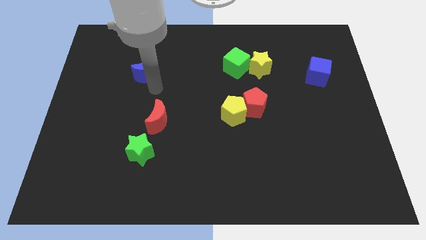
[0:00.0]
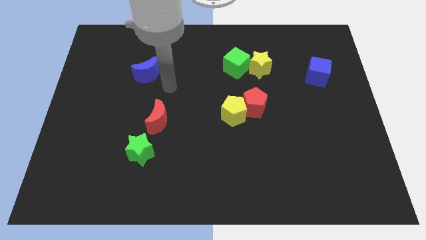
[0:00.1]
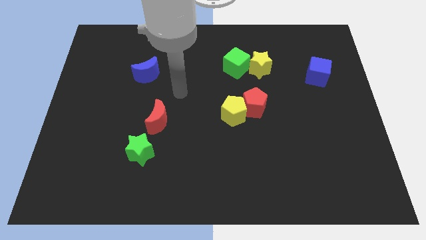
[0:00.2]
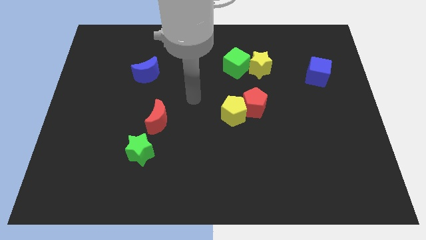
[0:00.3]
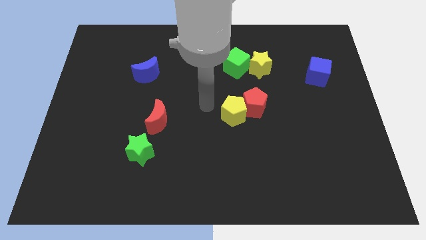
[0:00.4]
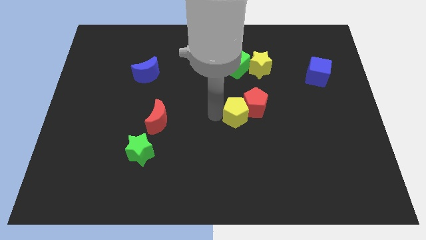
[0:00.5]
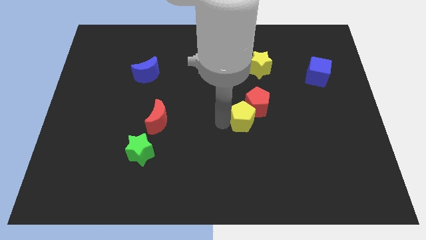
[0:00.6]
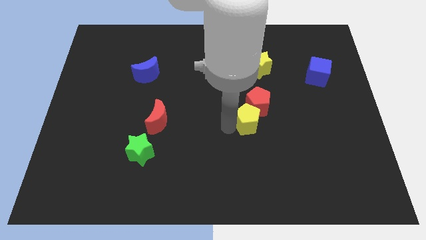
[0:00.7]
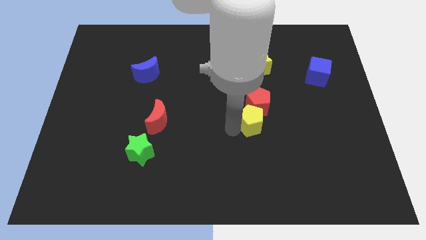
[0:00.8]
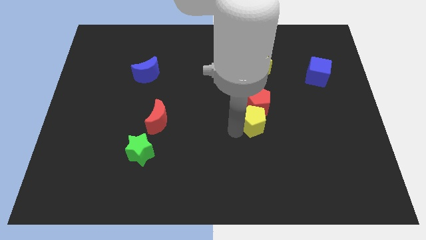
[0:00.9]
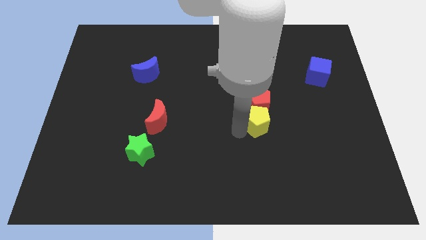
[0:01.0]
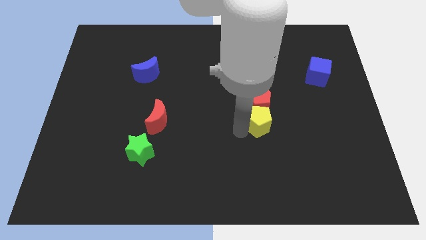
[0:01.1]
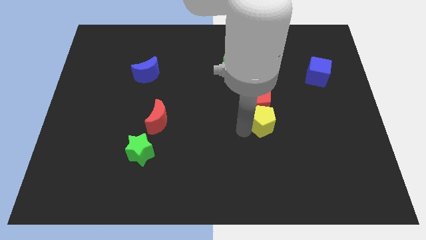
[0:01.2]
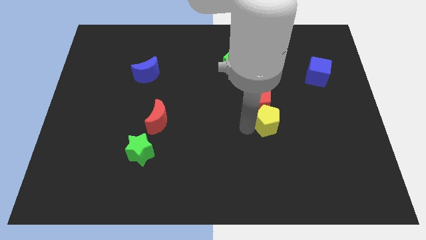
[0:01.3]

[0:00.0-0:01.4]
adjust the yellow pentagon vertically below the red pentagon

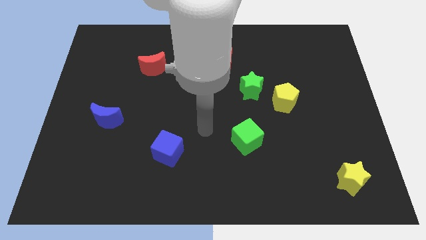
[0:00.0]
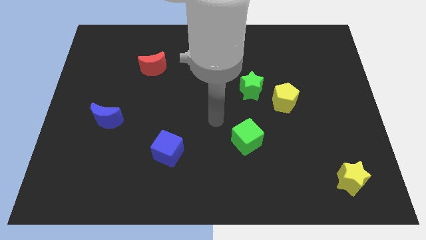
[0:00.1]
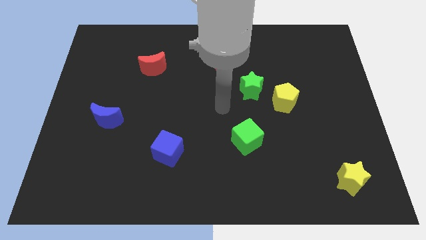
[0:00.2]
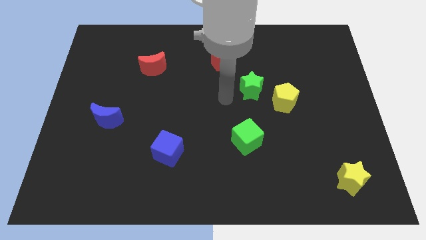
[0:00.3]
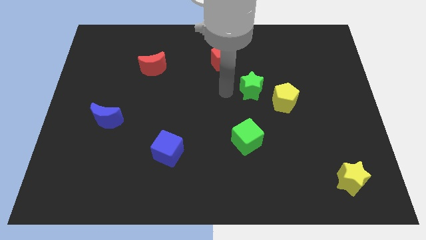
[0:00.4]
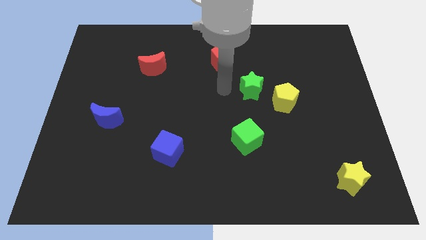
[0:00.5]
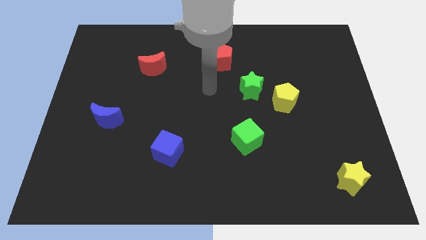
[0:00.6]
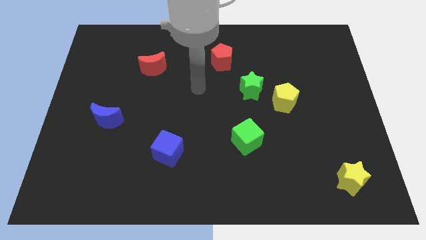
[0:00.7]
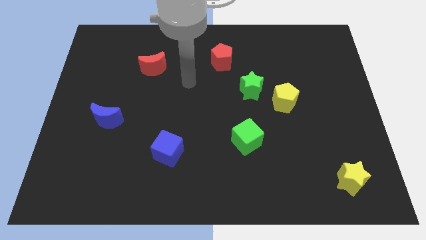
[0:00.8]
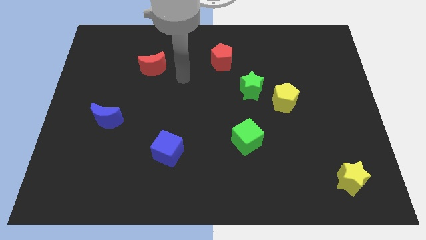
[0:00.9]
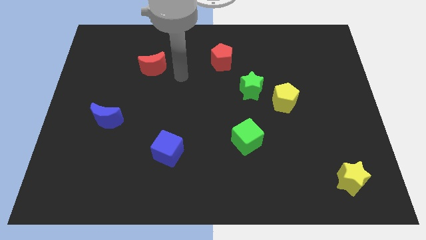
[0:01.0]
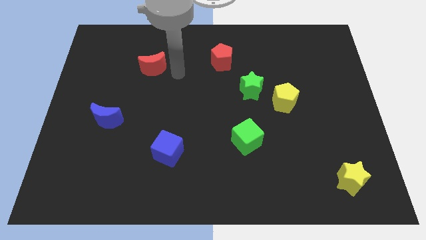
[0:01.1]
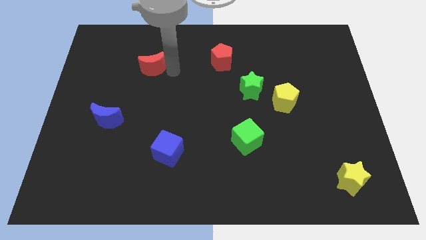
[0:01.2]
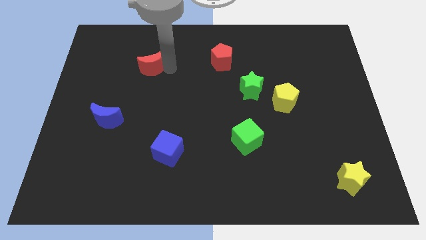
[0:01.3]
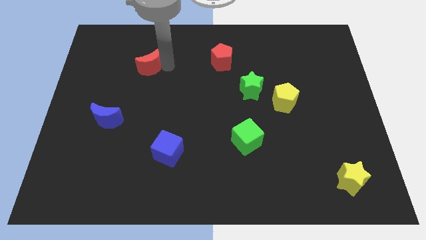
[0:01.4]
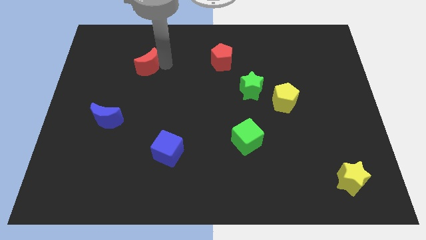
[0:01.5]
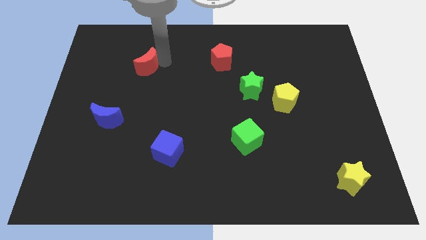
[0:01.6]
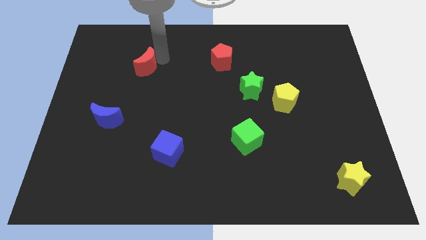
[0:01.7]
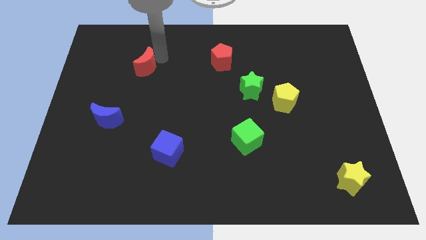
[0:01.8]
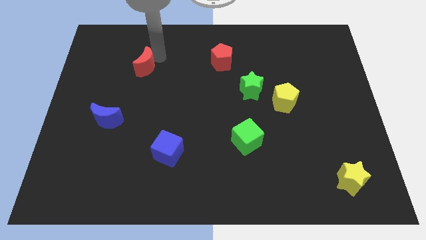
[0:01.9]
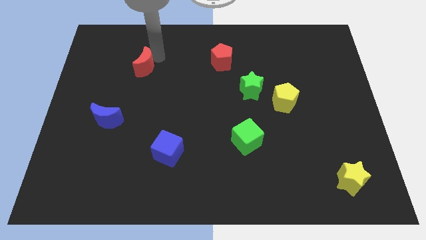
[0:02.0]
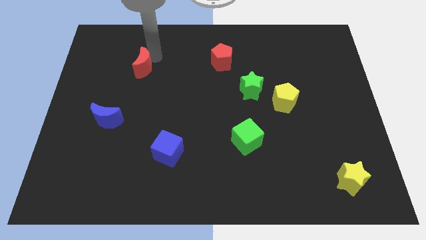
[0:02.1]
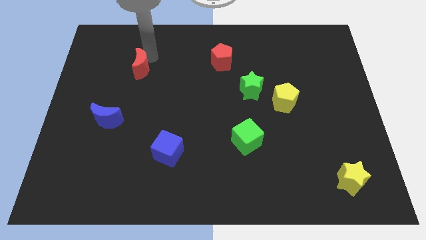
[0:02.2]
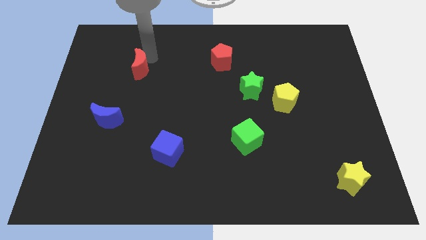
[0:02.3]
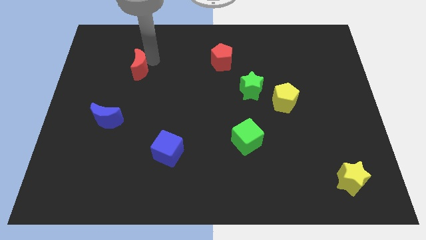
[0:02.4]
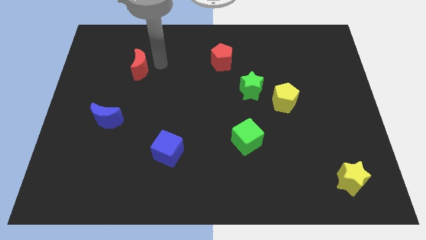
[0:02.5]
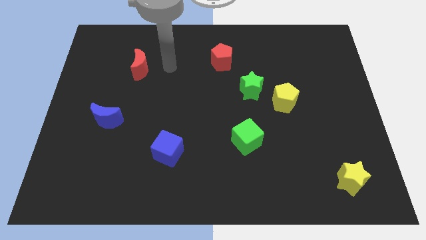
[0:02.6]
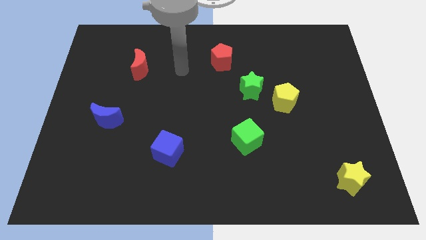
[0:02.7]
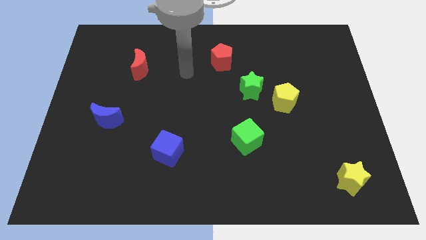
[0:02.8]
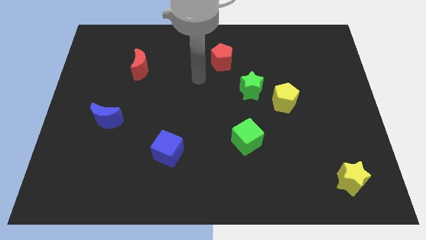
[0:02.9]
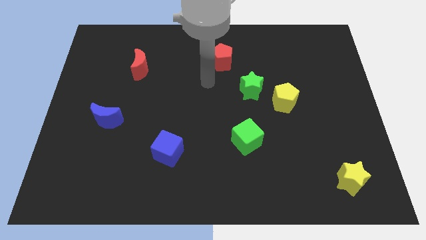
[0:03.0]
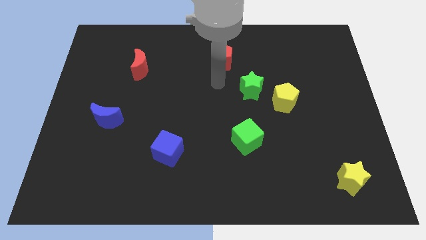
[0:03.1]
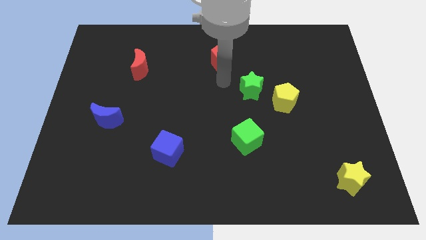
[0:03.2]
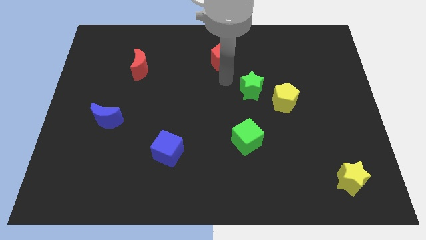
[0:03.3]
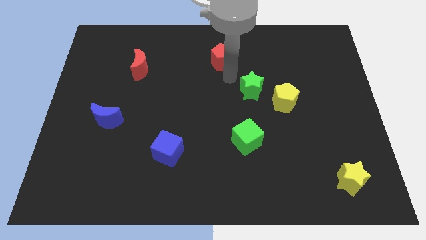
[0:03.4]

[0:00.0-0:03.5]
move the red crescent slightly to the left

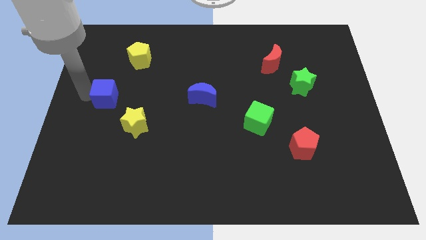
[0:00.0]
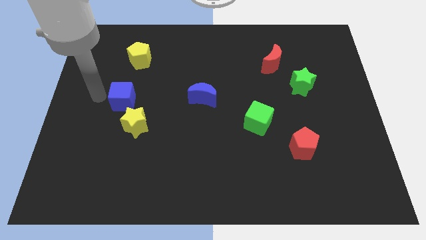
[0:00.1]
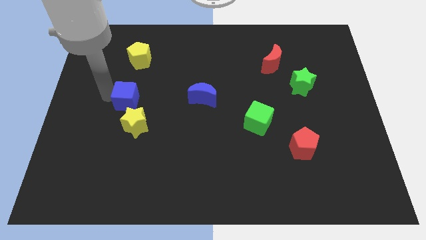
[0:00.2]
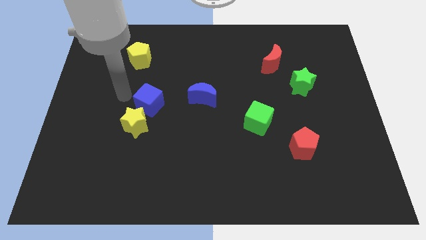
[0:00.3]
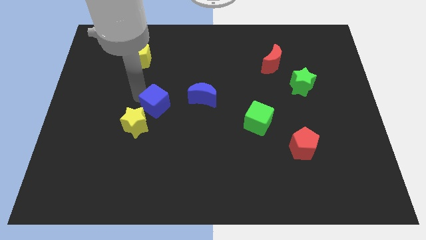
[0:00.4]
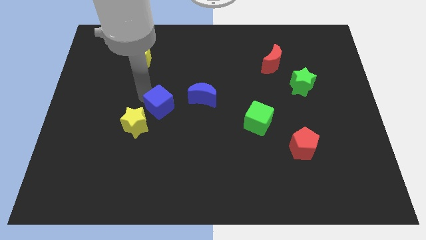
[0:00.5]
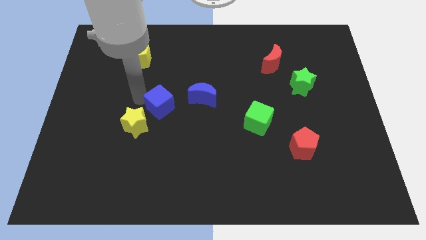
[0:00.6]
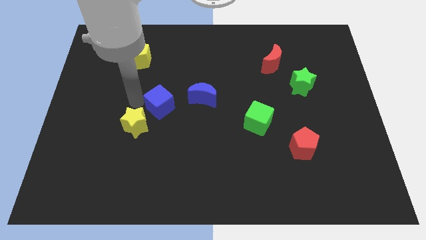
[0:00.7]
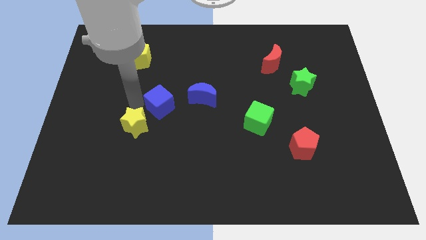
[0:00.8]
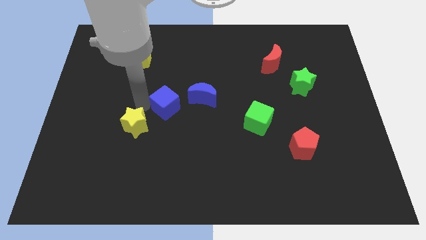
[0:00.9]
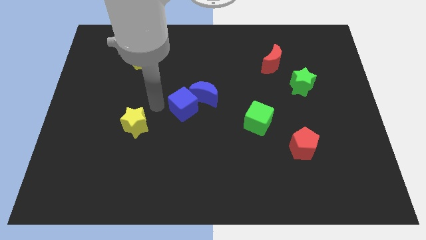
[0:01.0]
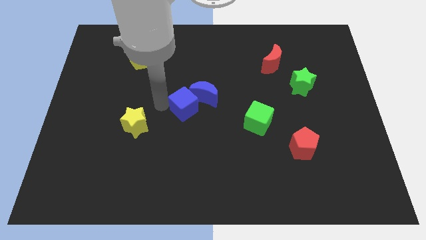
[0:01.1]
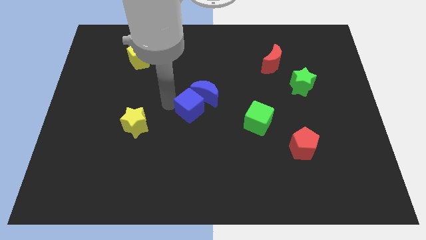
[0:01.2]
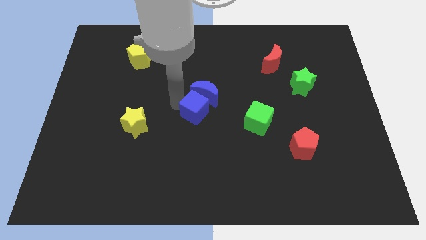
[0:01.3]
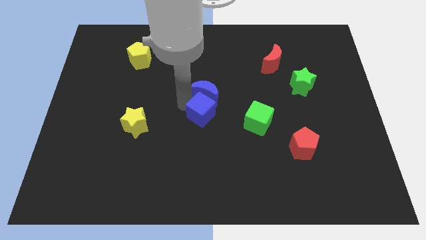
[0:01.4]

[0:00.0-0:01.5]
place the blue cube below the blue moon

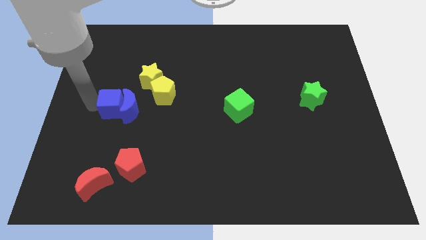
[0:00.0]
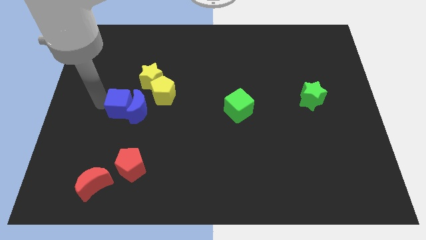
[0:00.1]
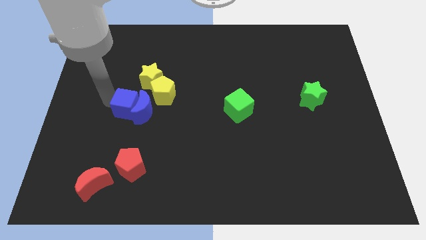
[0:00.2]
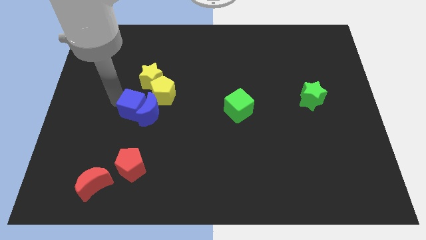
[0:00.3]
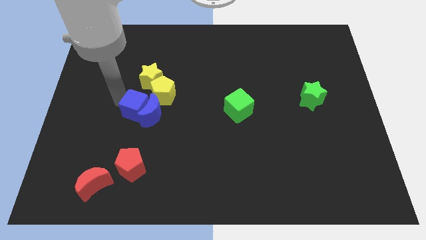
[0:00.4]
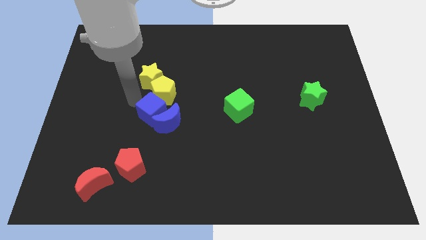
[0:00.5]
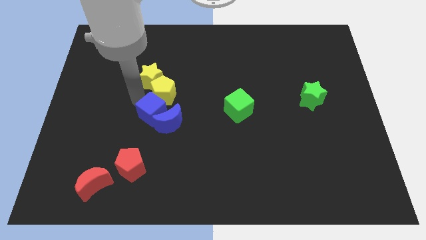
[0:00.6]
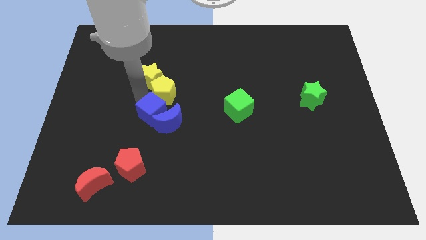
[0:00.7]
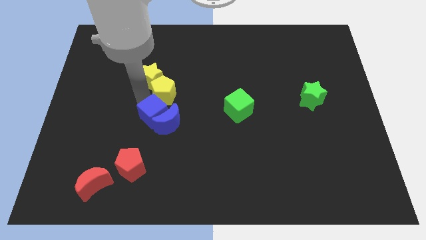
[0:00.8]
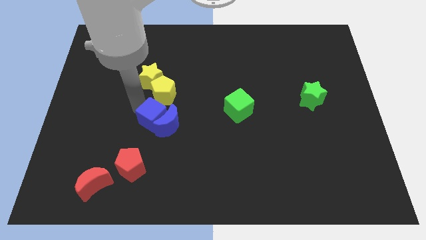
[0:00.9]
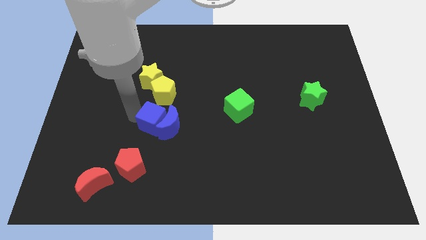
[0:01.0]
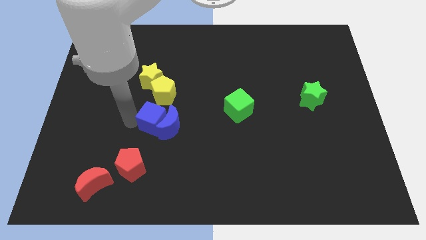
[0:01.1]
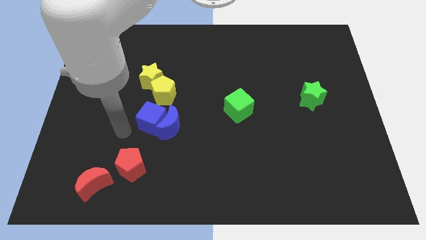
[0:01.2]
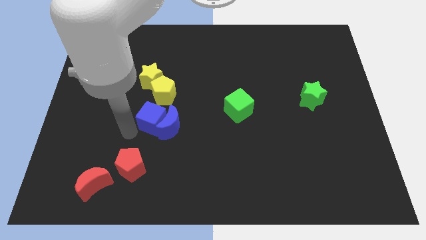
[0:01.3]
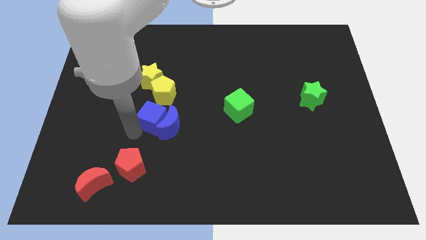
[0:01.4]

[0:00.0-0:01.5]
place the blue blocks below the yellow blocks

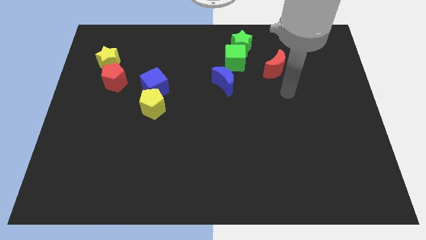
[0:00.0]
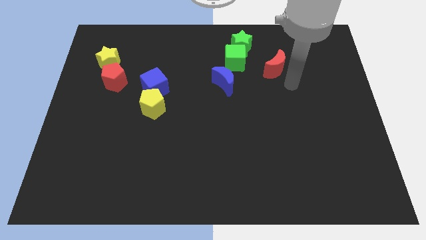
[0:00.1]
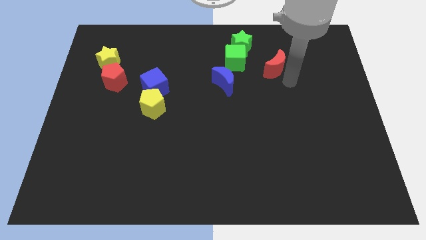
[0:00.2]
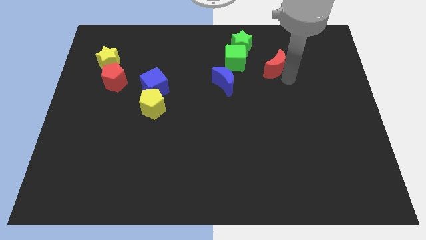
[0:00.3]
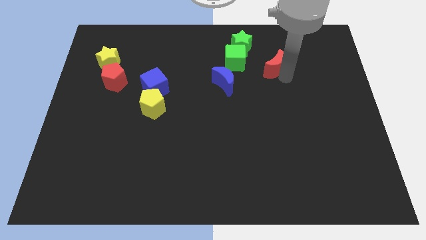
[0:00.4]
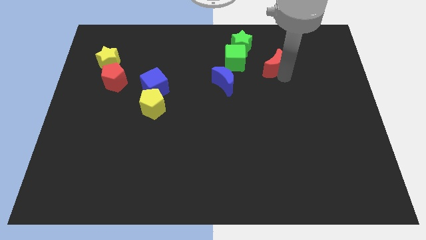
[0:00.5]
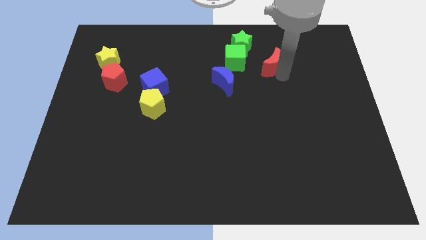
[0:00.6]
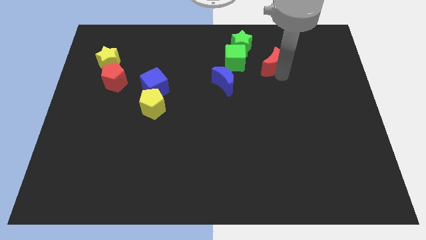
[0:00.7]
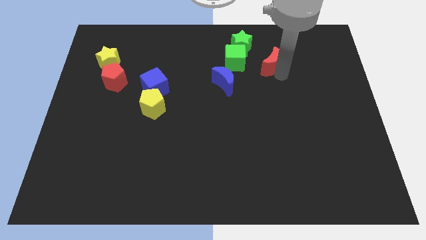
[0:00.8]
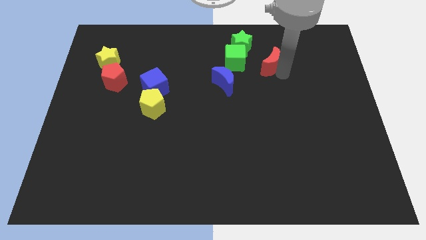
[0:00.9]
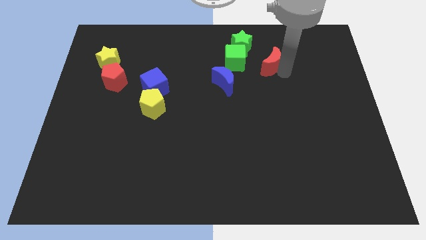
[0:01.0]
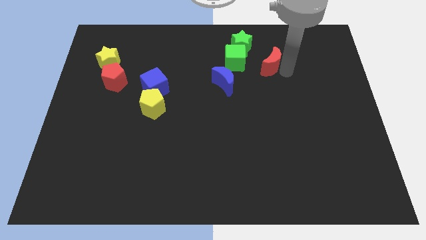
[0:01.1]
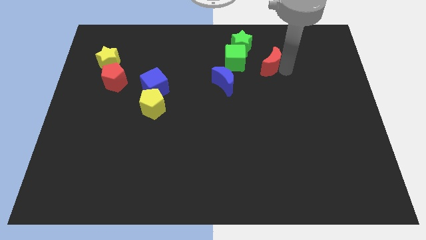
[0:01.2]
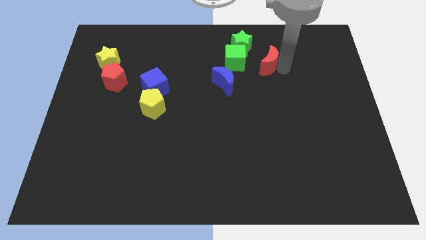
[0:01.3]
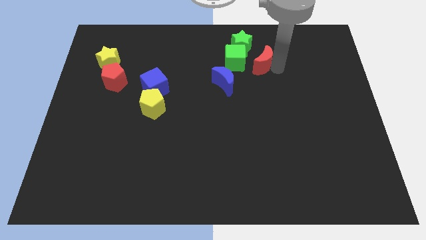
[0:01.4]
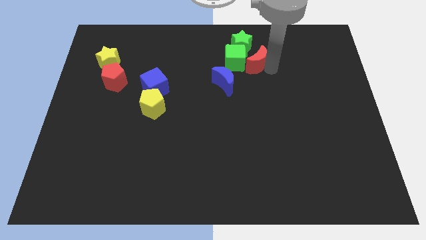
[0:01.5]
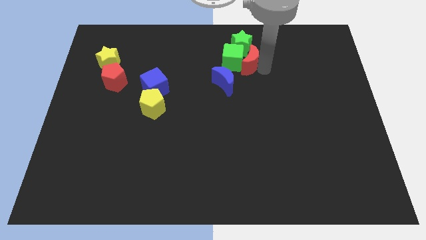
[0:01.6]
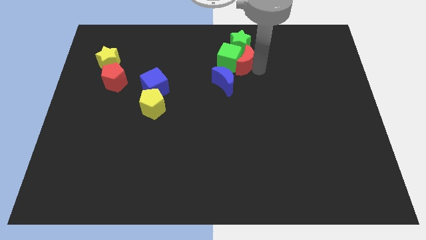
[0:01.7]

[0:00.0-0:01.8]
move the red moon into the green cube
